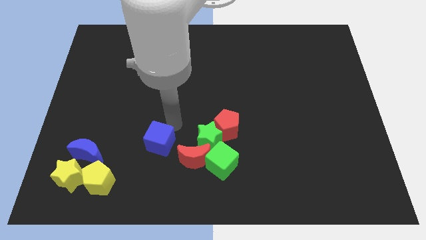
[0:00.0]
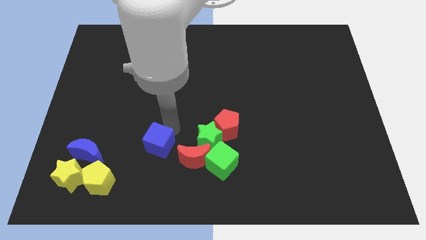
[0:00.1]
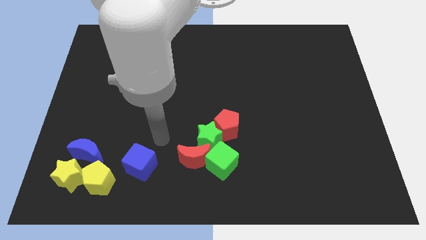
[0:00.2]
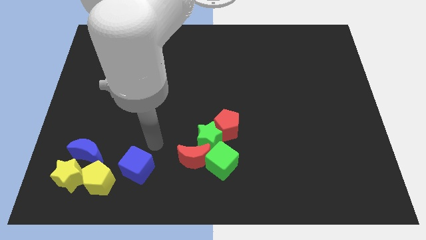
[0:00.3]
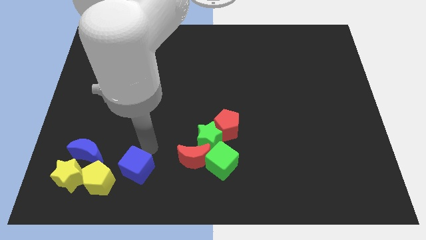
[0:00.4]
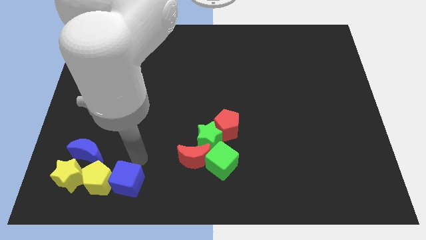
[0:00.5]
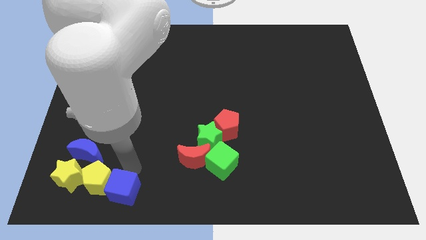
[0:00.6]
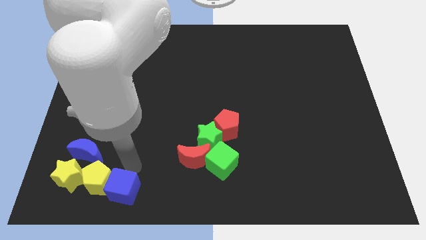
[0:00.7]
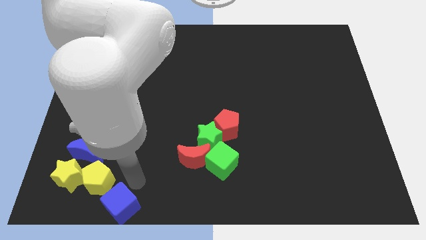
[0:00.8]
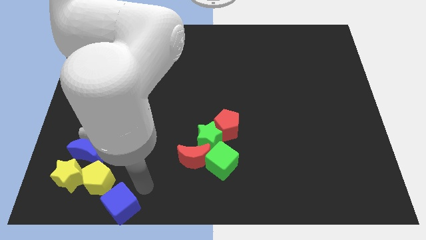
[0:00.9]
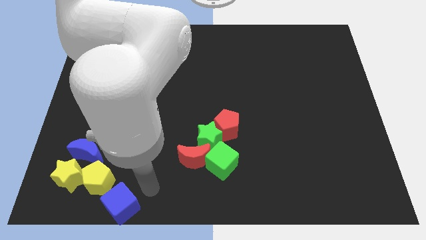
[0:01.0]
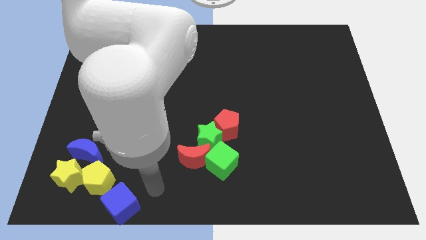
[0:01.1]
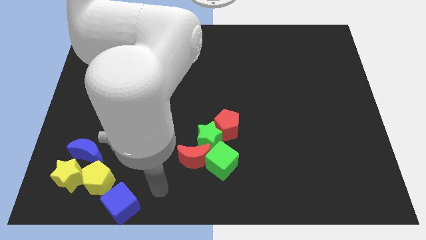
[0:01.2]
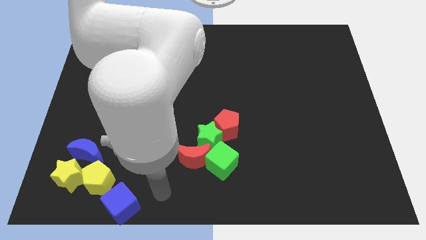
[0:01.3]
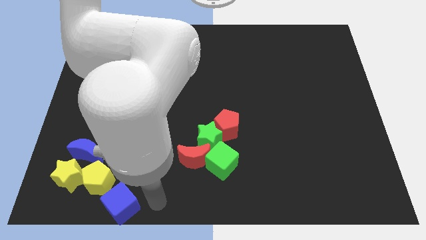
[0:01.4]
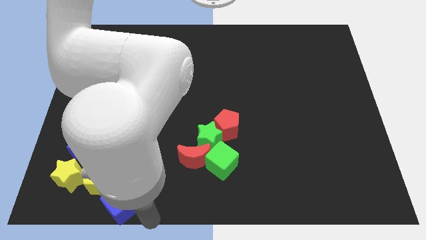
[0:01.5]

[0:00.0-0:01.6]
push the blue cube towards the bottom of the board

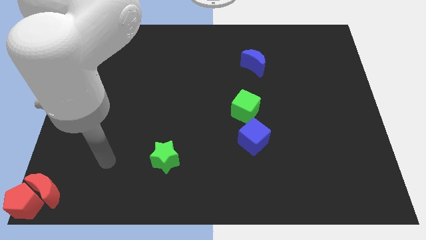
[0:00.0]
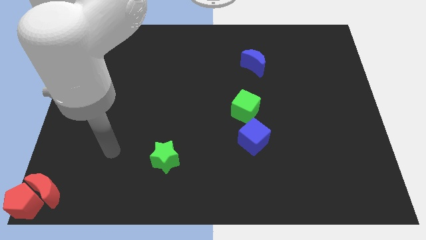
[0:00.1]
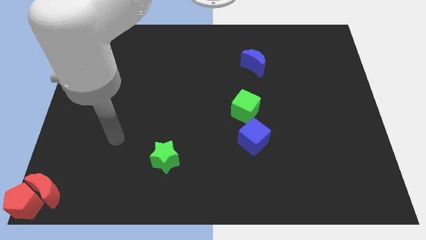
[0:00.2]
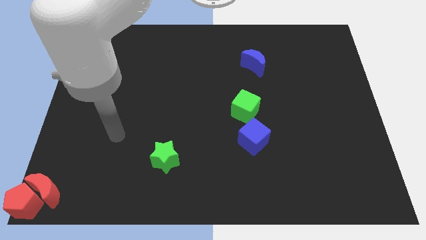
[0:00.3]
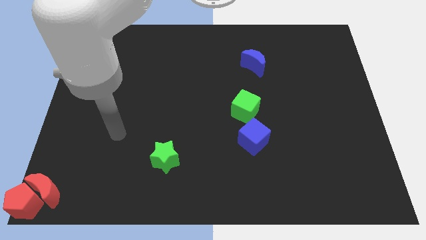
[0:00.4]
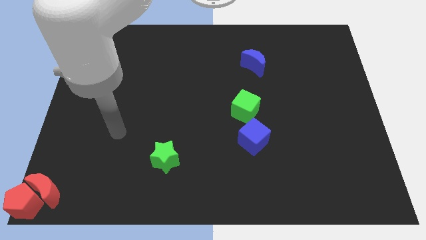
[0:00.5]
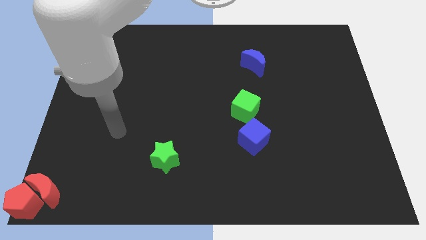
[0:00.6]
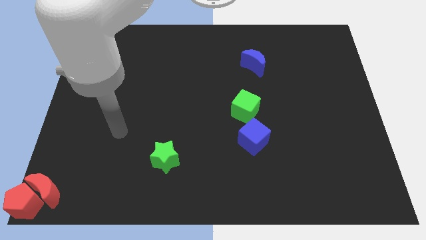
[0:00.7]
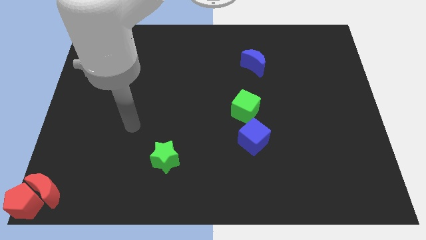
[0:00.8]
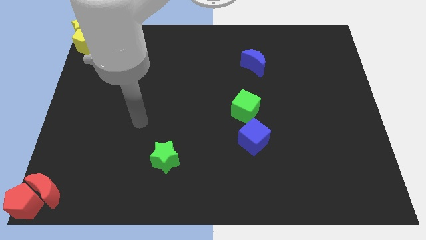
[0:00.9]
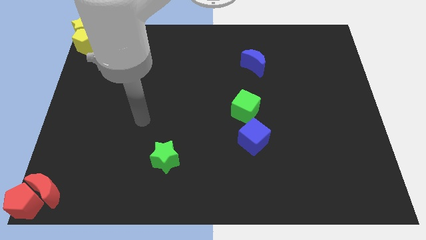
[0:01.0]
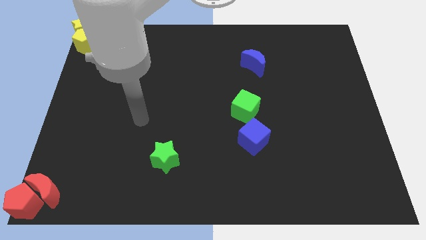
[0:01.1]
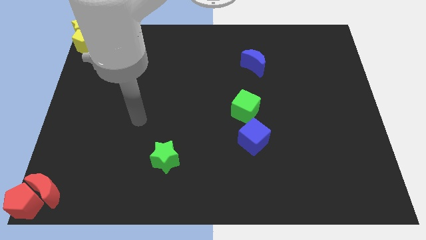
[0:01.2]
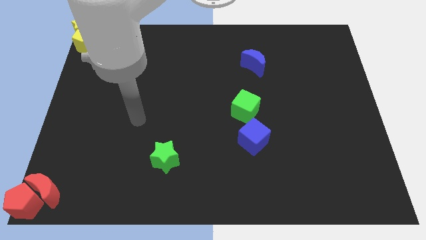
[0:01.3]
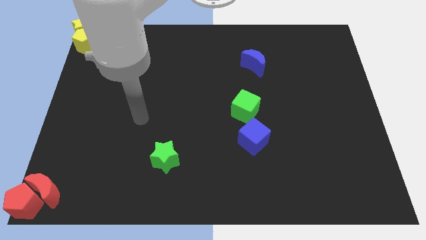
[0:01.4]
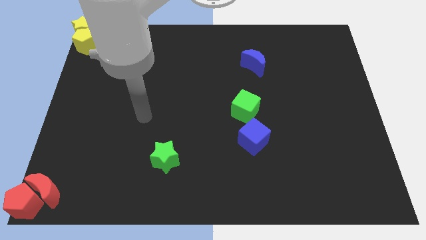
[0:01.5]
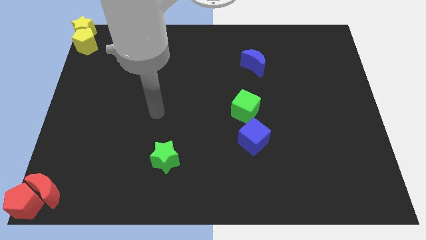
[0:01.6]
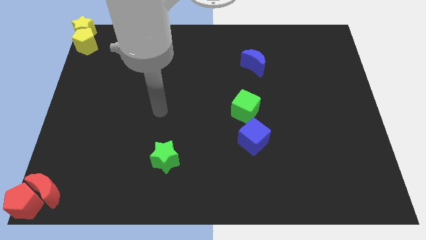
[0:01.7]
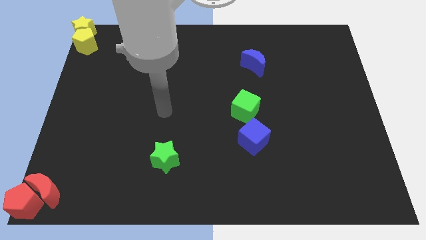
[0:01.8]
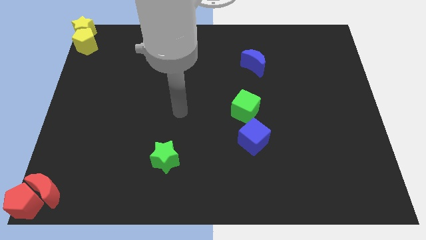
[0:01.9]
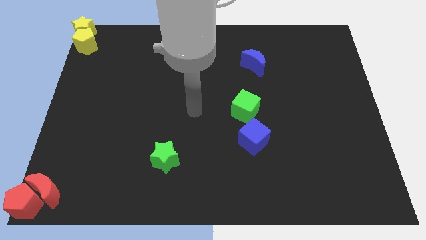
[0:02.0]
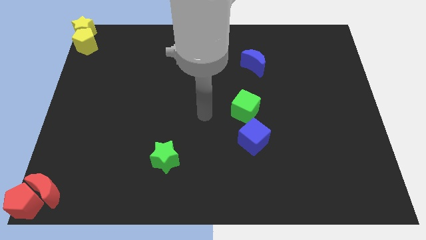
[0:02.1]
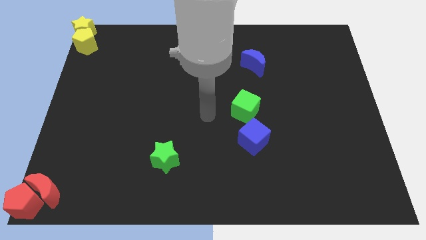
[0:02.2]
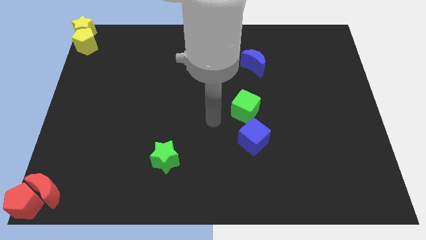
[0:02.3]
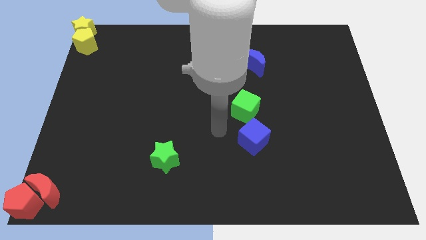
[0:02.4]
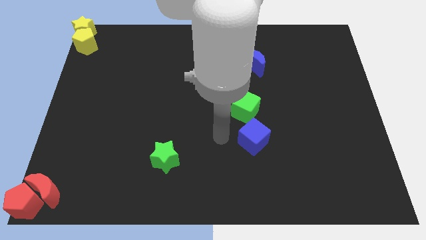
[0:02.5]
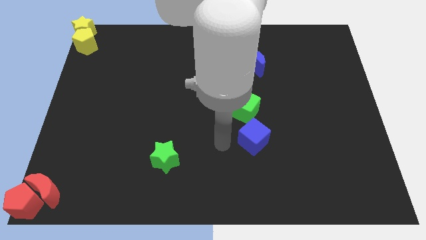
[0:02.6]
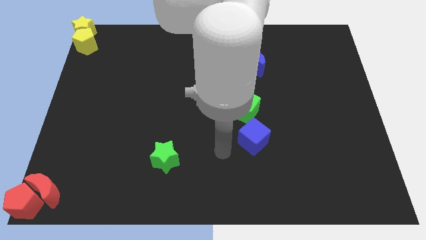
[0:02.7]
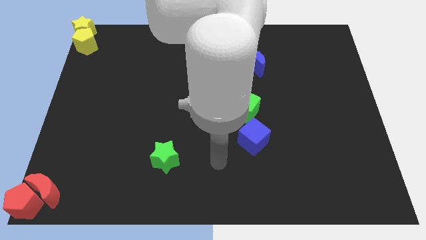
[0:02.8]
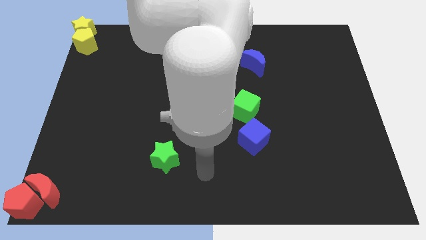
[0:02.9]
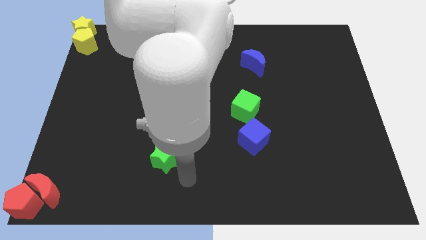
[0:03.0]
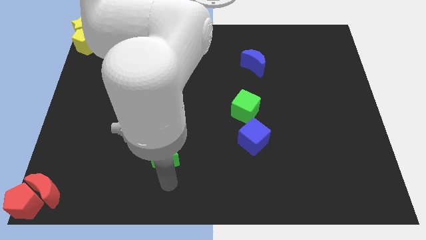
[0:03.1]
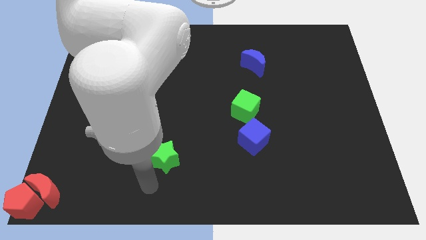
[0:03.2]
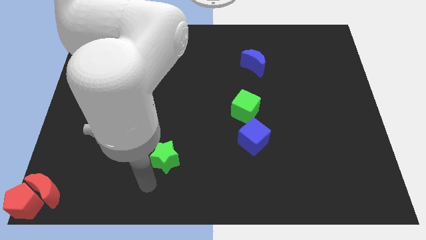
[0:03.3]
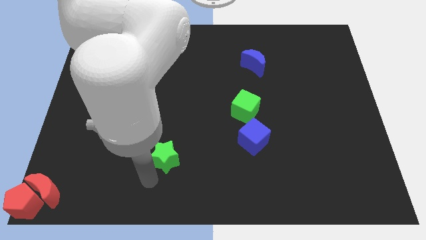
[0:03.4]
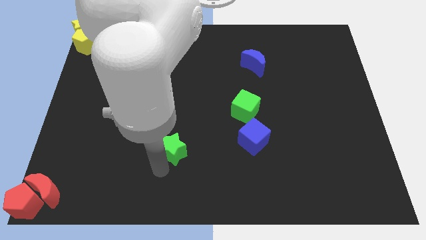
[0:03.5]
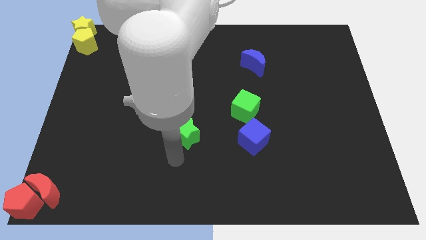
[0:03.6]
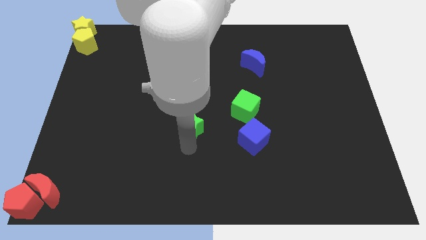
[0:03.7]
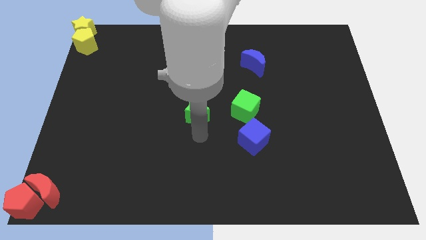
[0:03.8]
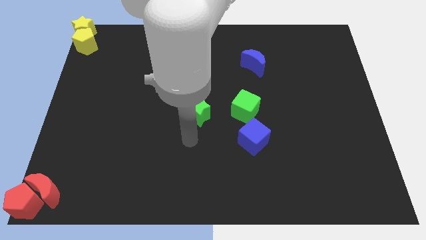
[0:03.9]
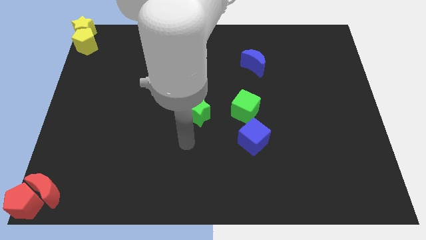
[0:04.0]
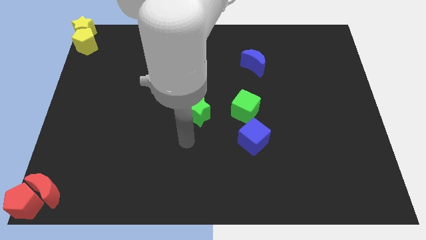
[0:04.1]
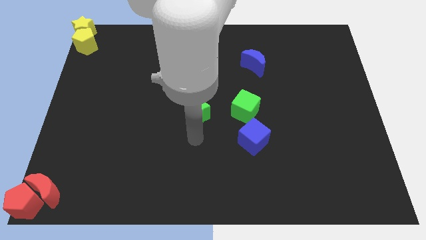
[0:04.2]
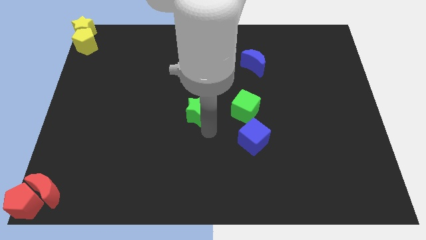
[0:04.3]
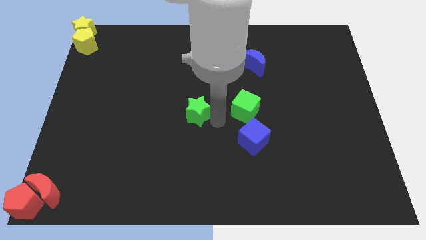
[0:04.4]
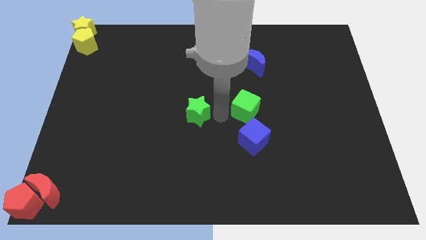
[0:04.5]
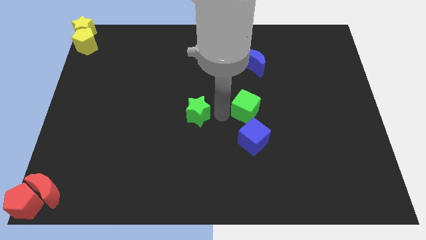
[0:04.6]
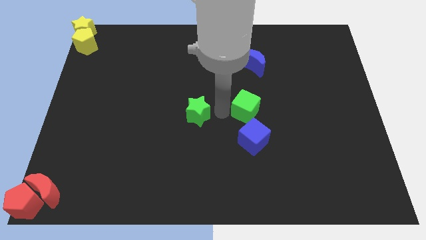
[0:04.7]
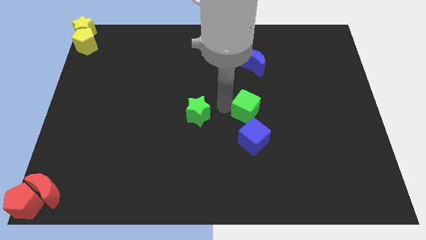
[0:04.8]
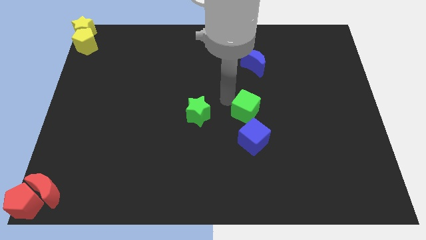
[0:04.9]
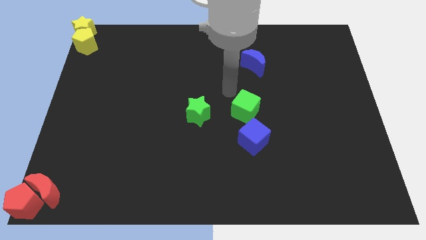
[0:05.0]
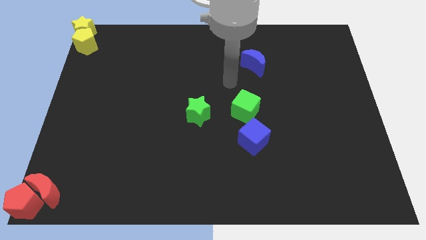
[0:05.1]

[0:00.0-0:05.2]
move the green star to the left of the green cube

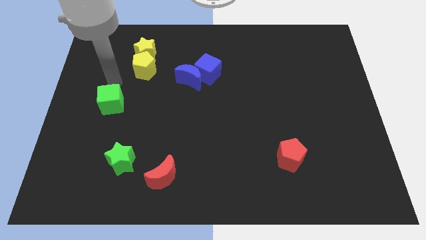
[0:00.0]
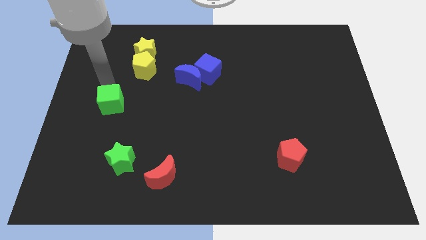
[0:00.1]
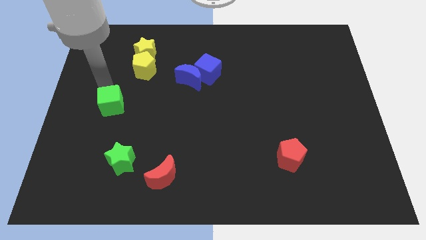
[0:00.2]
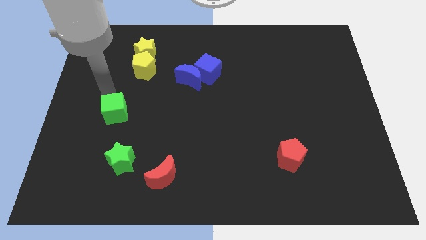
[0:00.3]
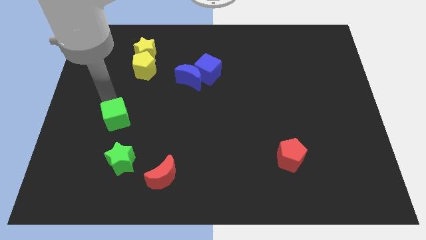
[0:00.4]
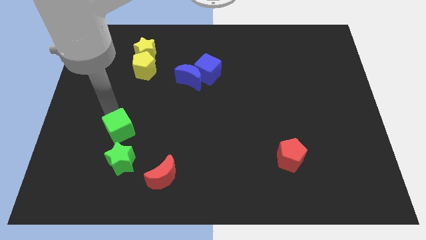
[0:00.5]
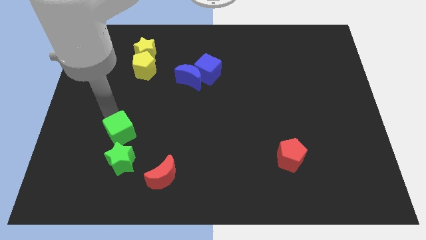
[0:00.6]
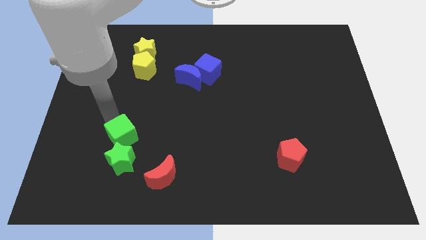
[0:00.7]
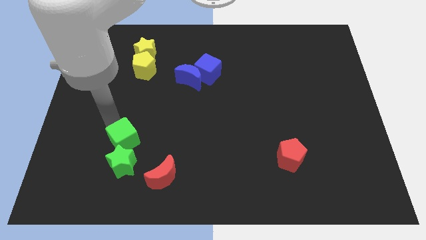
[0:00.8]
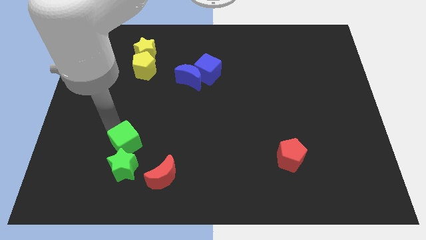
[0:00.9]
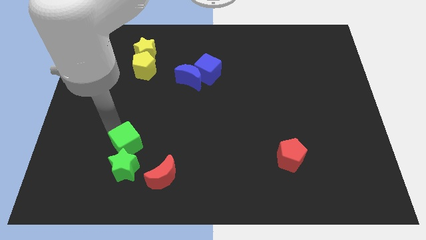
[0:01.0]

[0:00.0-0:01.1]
push the green cube into the green star

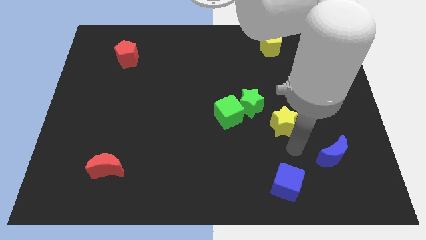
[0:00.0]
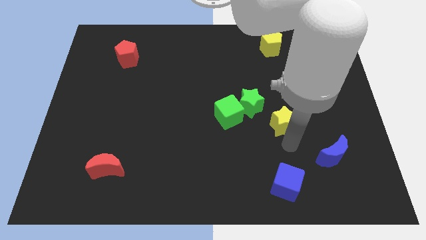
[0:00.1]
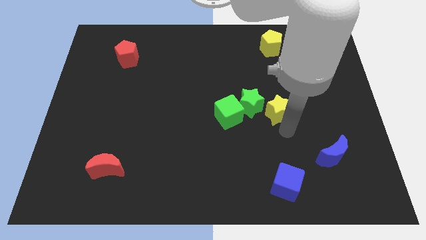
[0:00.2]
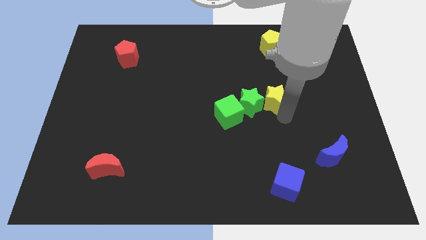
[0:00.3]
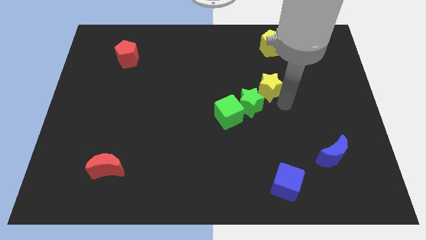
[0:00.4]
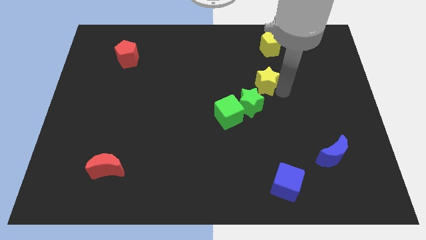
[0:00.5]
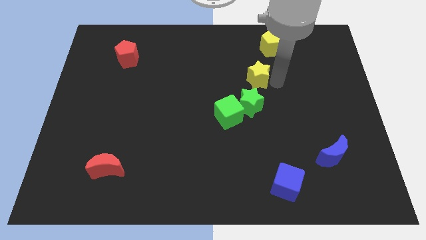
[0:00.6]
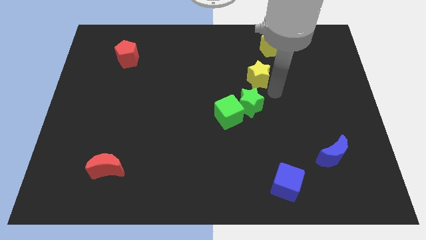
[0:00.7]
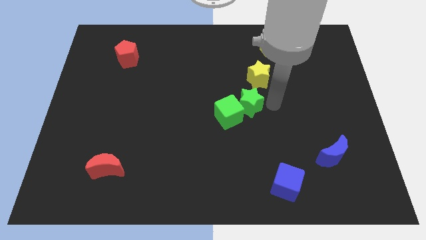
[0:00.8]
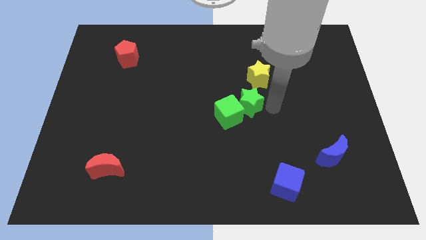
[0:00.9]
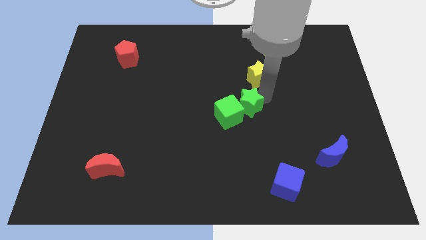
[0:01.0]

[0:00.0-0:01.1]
slide yellow star above green star

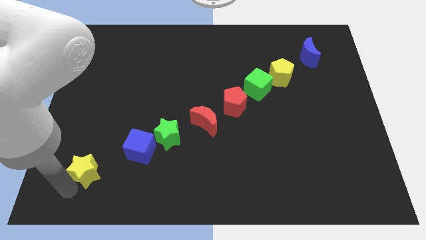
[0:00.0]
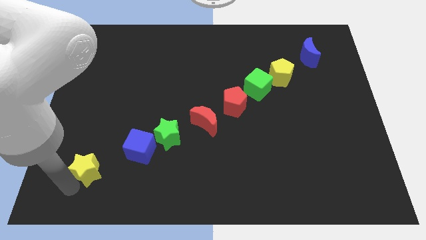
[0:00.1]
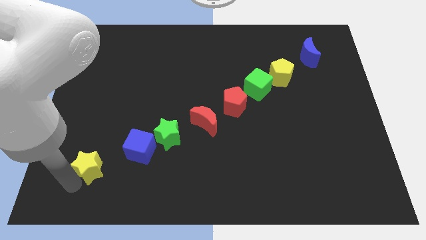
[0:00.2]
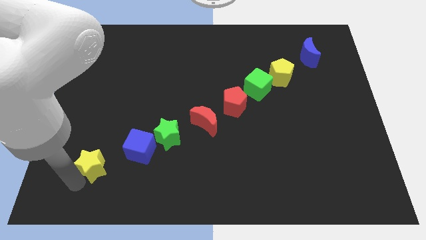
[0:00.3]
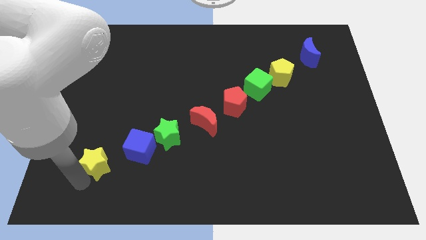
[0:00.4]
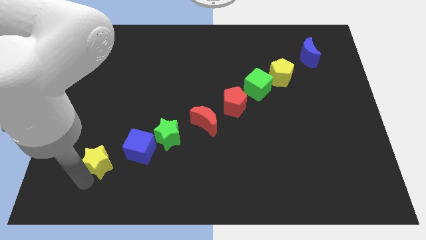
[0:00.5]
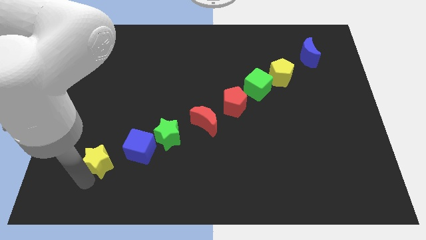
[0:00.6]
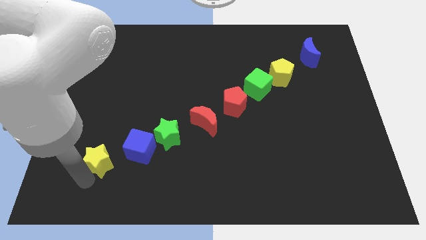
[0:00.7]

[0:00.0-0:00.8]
place the yellow star diagonally to the blue cube
